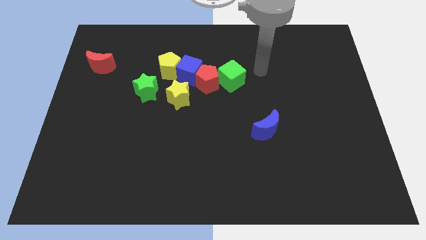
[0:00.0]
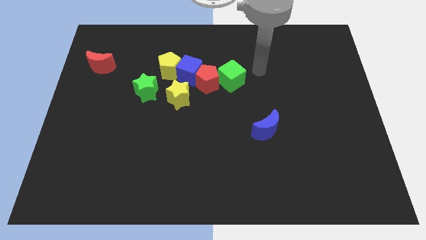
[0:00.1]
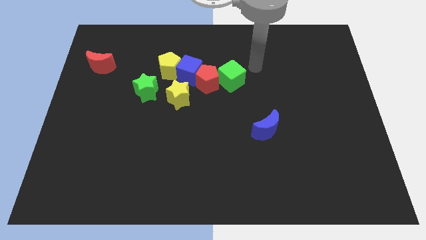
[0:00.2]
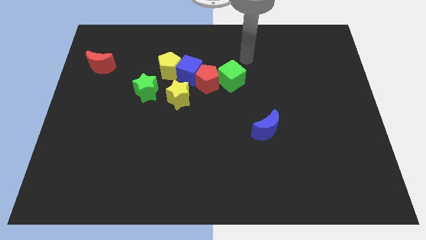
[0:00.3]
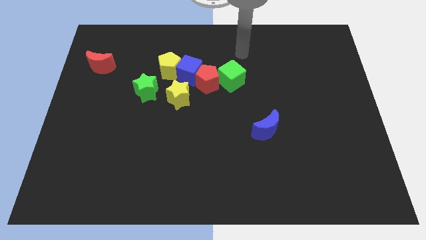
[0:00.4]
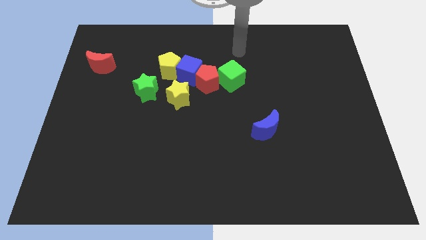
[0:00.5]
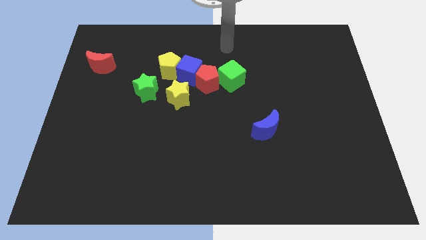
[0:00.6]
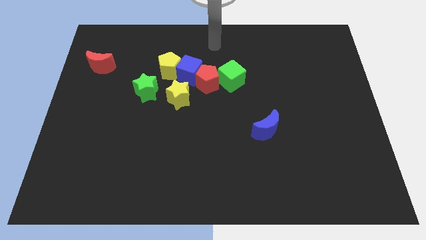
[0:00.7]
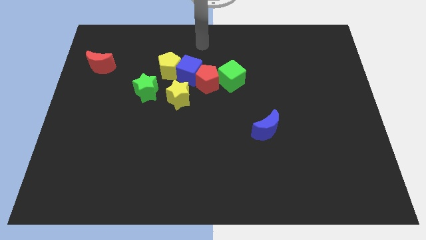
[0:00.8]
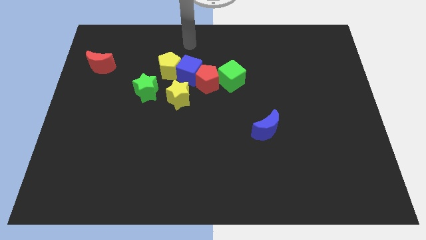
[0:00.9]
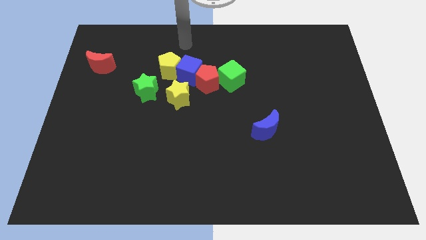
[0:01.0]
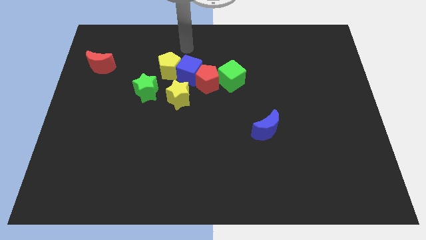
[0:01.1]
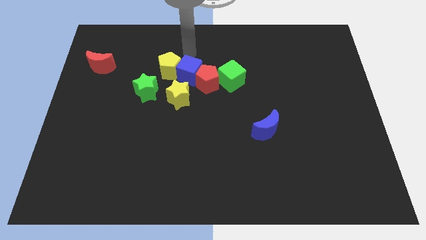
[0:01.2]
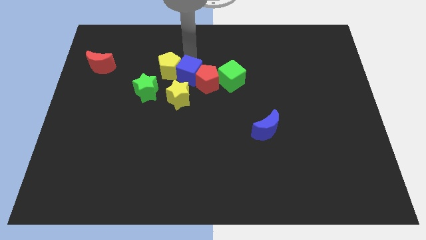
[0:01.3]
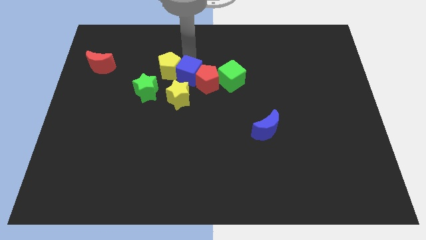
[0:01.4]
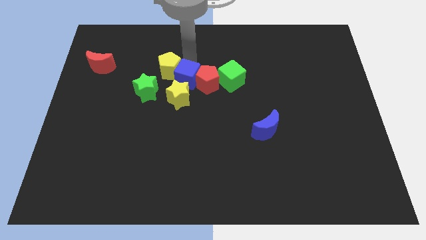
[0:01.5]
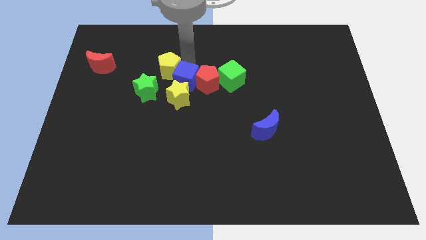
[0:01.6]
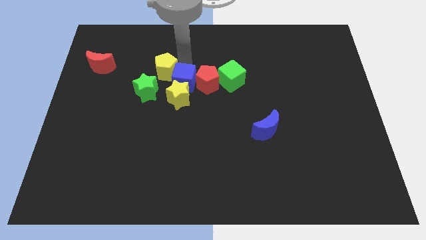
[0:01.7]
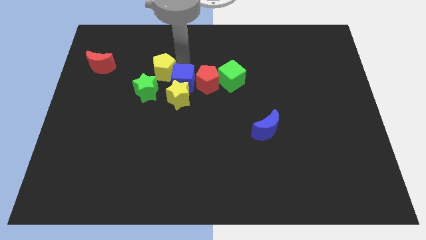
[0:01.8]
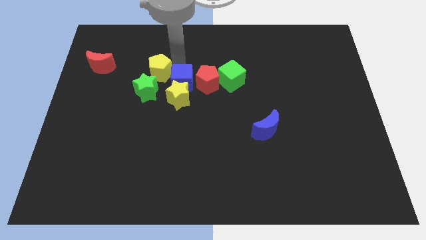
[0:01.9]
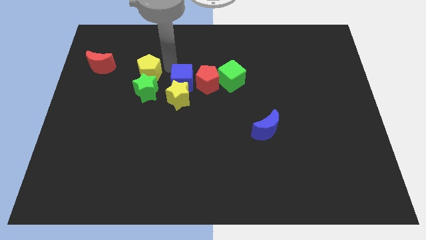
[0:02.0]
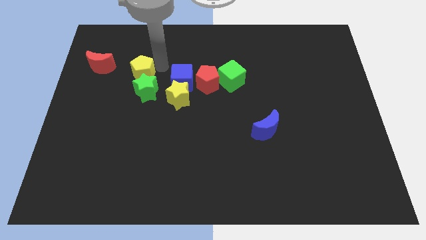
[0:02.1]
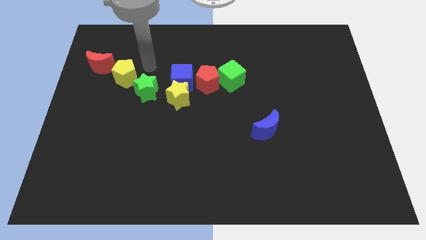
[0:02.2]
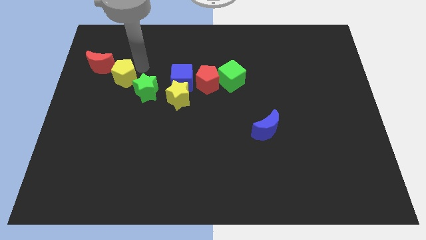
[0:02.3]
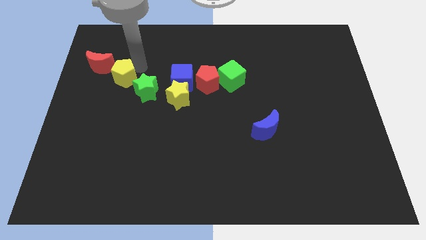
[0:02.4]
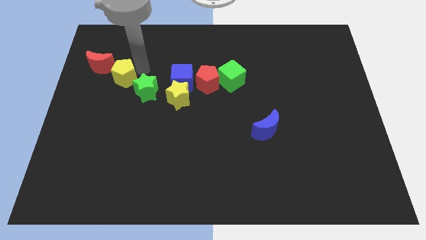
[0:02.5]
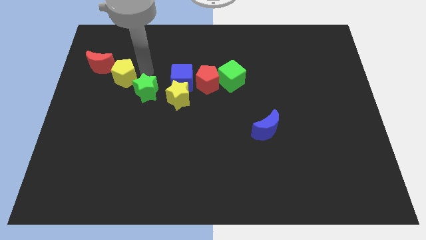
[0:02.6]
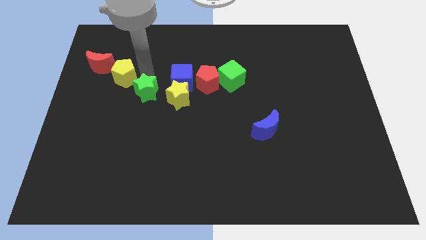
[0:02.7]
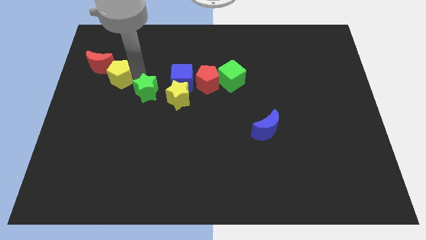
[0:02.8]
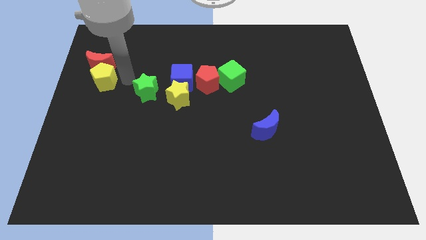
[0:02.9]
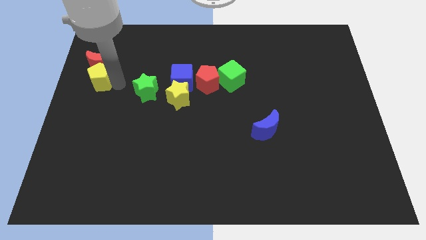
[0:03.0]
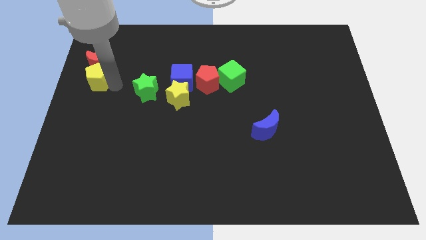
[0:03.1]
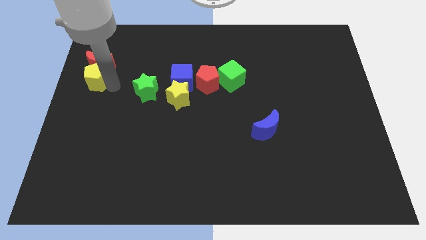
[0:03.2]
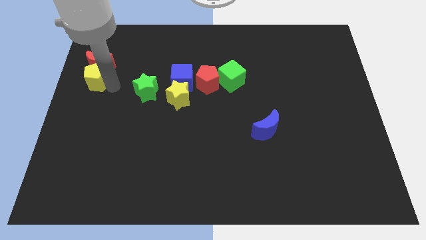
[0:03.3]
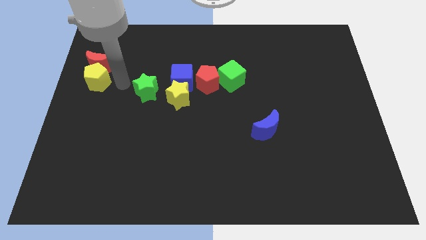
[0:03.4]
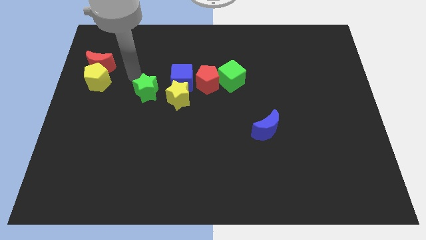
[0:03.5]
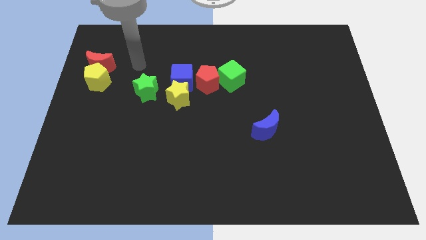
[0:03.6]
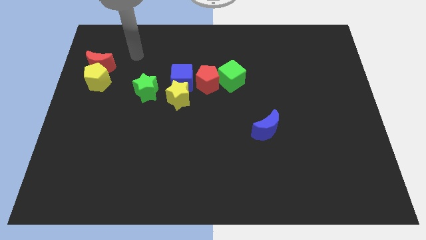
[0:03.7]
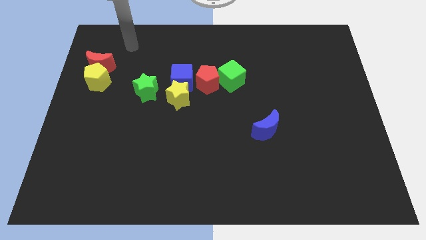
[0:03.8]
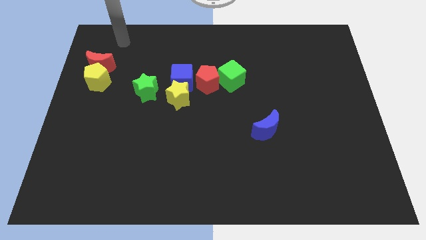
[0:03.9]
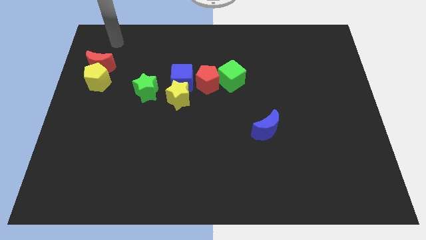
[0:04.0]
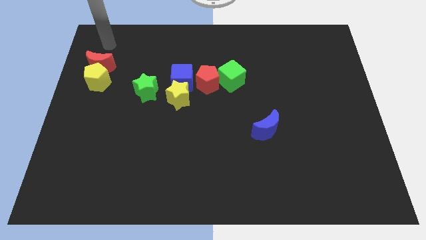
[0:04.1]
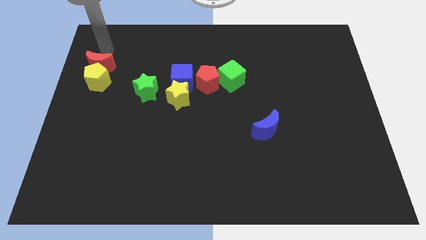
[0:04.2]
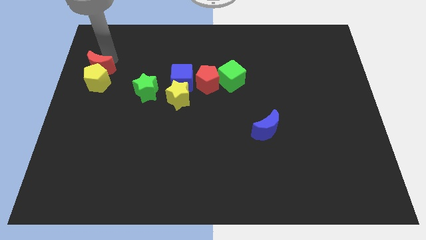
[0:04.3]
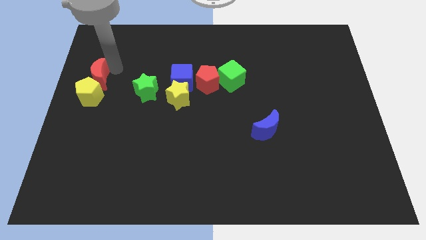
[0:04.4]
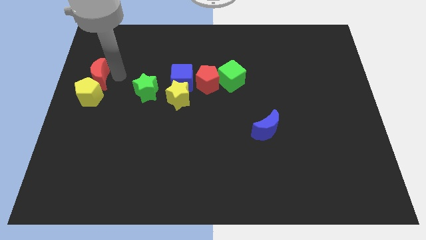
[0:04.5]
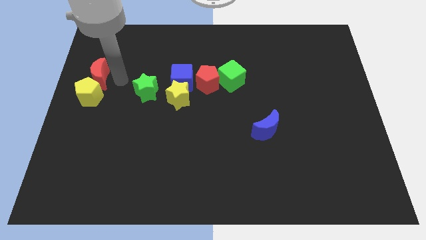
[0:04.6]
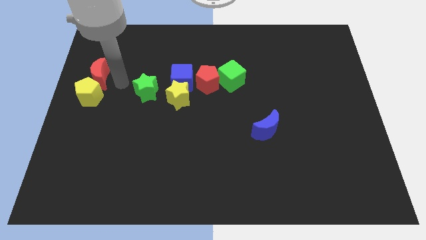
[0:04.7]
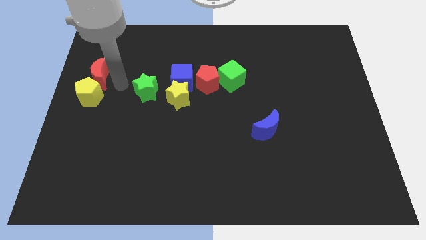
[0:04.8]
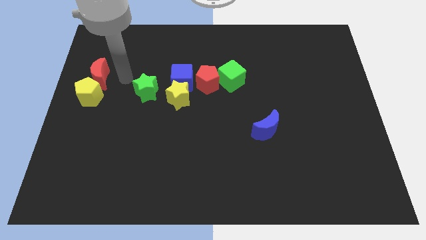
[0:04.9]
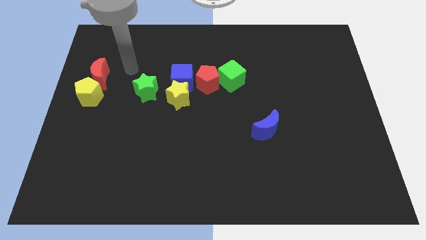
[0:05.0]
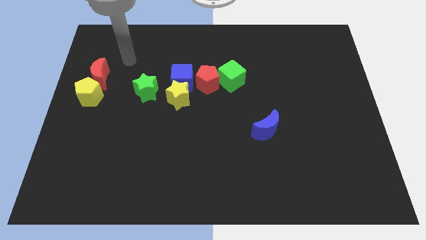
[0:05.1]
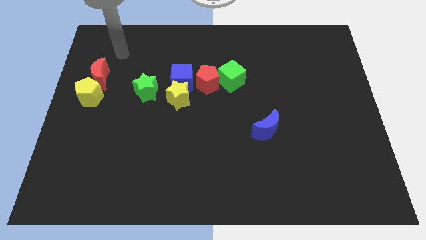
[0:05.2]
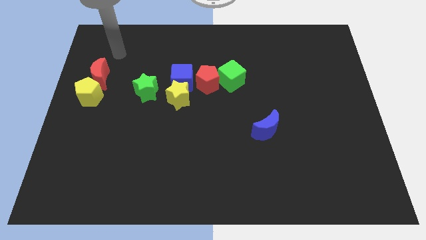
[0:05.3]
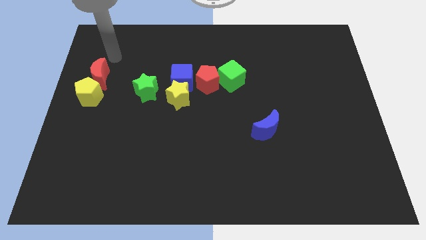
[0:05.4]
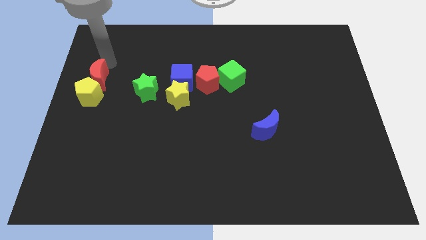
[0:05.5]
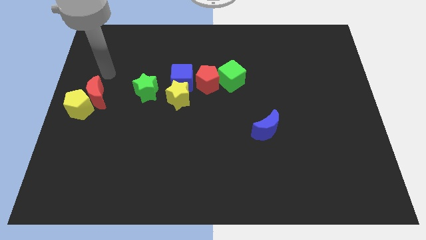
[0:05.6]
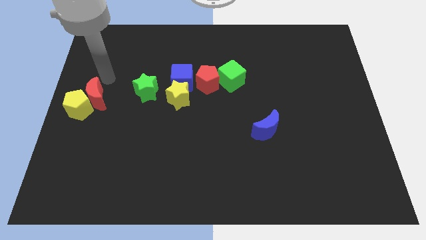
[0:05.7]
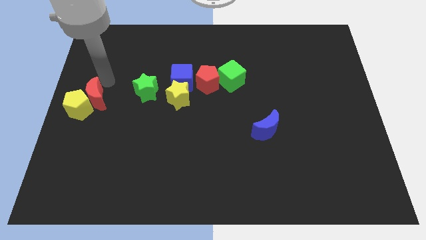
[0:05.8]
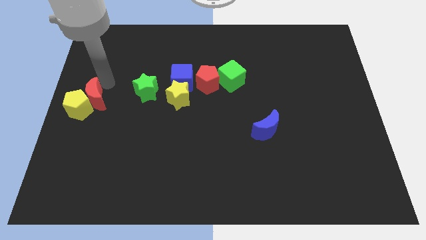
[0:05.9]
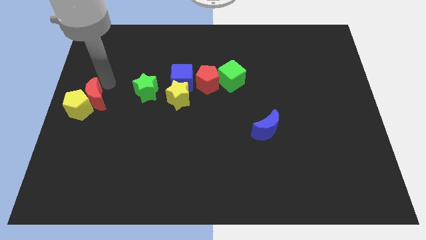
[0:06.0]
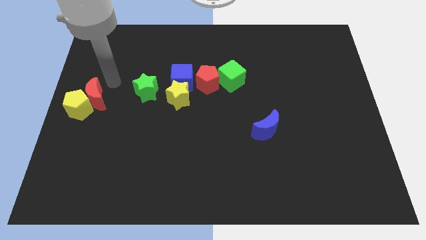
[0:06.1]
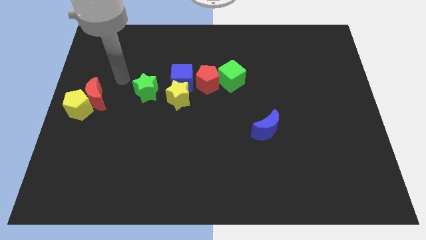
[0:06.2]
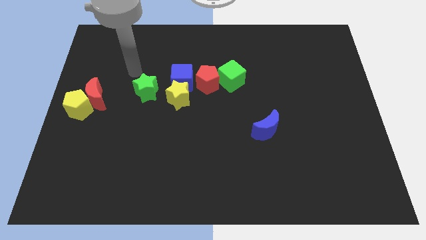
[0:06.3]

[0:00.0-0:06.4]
push the red crescent and yellow pentagon together at the center left of the board

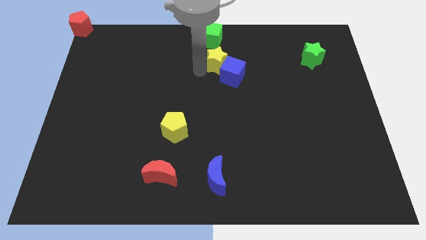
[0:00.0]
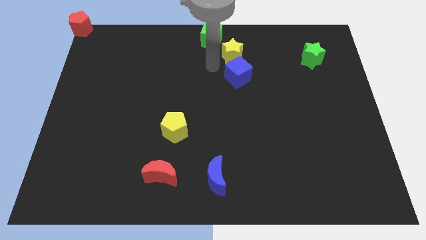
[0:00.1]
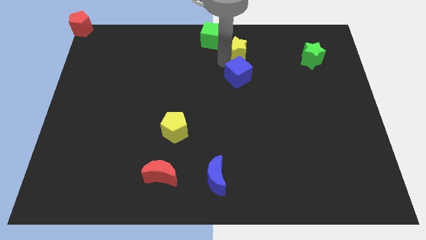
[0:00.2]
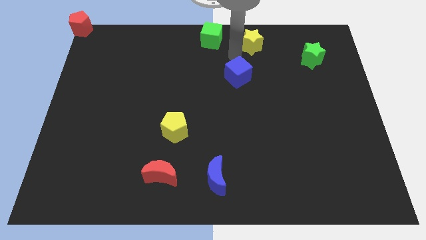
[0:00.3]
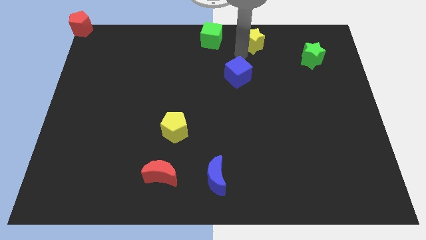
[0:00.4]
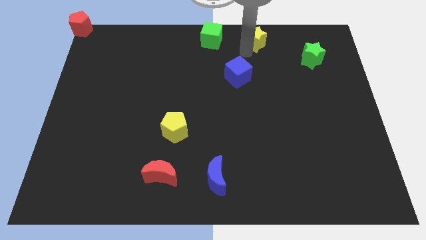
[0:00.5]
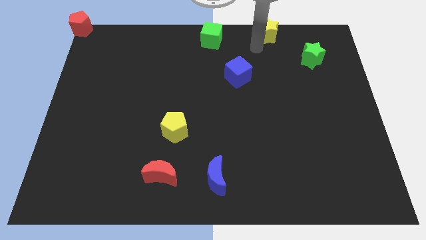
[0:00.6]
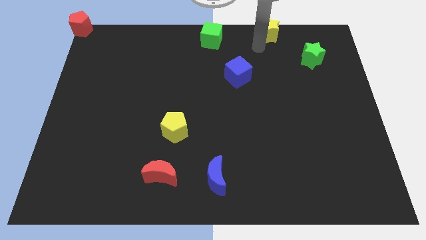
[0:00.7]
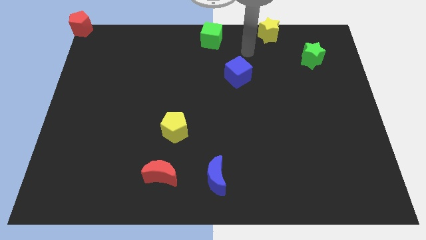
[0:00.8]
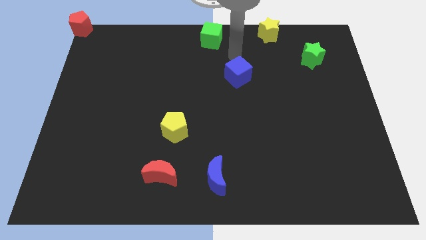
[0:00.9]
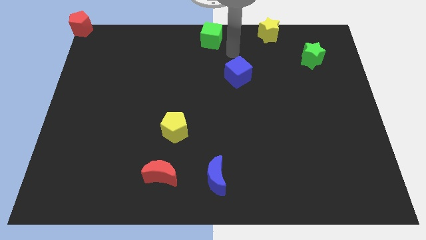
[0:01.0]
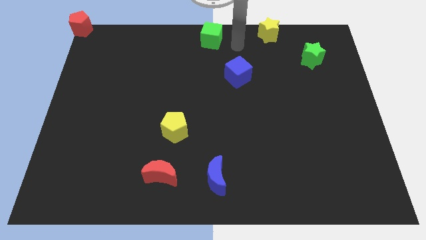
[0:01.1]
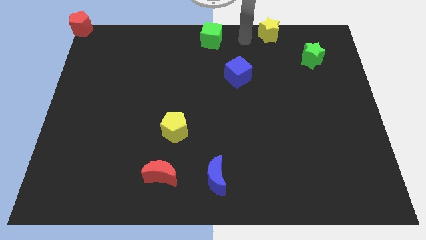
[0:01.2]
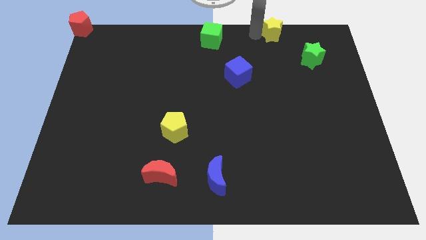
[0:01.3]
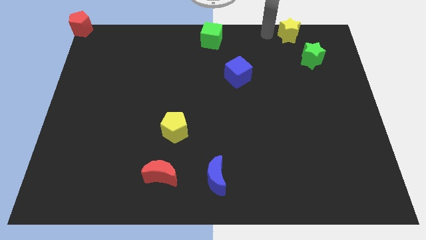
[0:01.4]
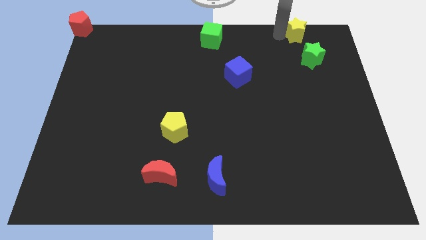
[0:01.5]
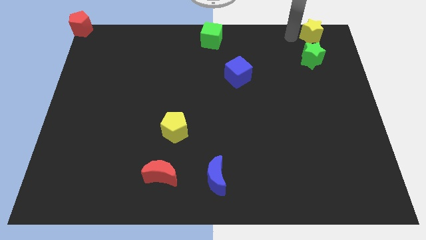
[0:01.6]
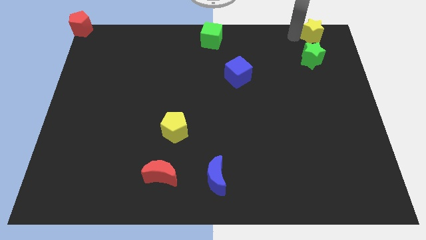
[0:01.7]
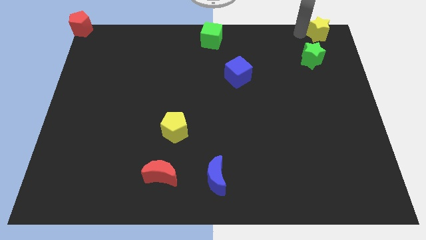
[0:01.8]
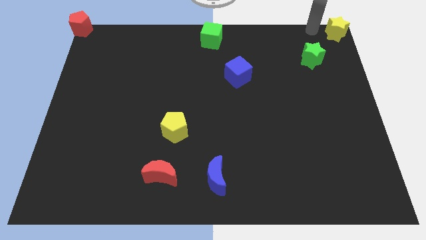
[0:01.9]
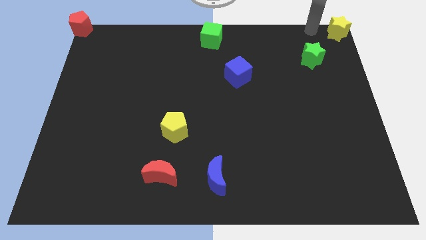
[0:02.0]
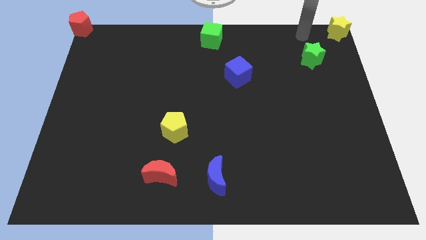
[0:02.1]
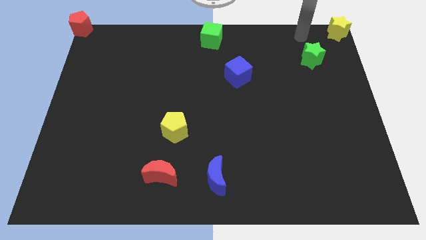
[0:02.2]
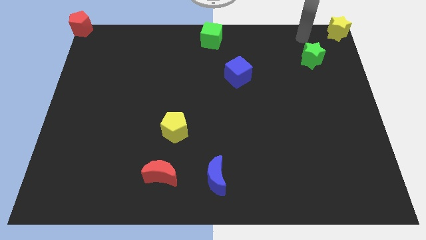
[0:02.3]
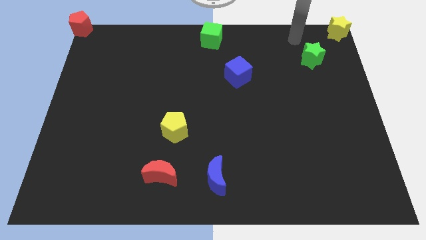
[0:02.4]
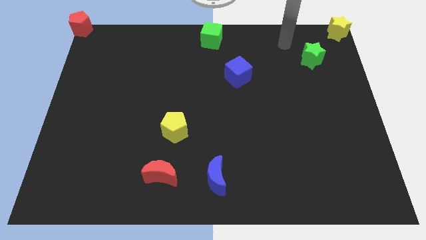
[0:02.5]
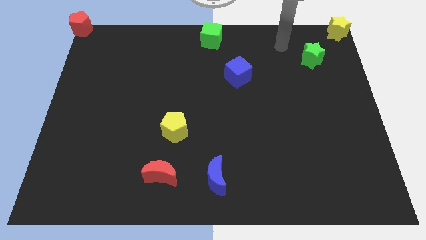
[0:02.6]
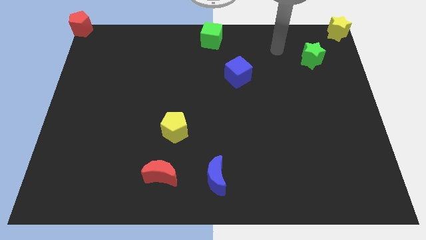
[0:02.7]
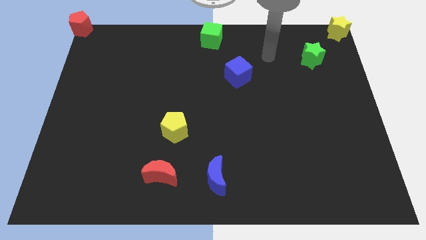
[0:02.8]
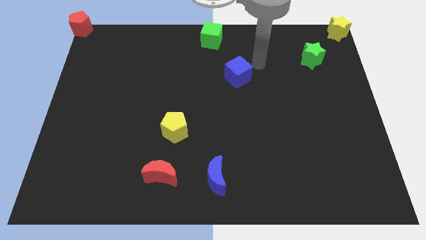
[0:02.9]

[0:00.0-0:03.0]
push the yellow star to the top right corner of the board
